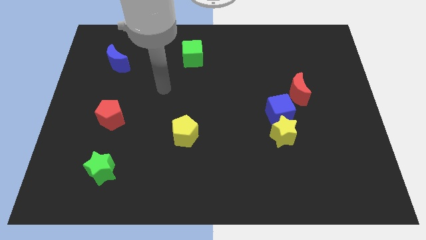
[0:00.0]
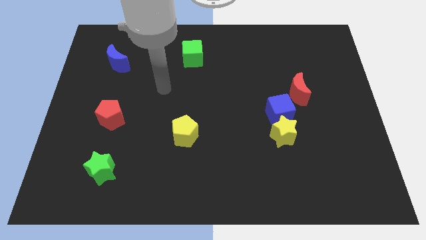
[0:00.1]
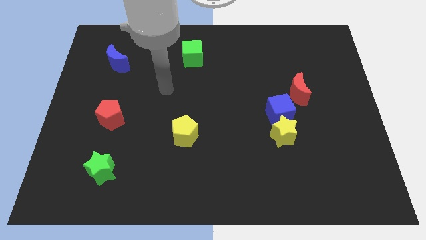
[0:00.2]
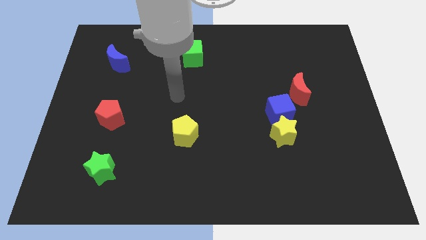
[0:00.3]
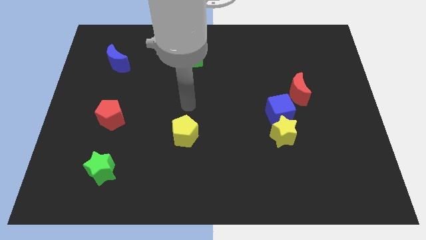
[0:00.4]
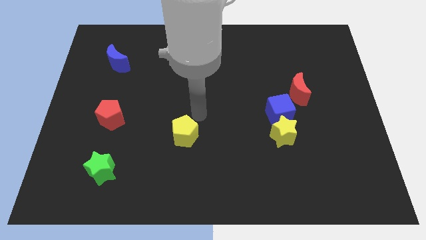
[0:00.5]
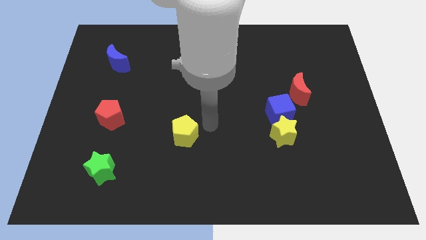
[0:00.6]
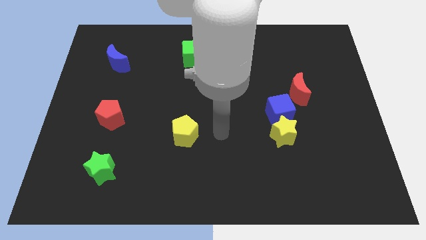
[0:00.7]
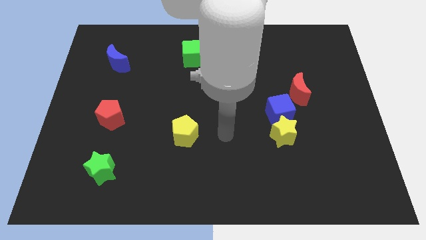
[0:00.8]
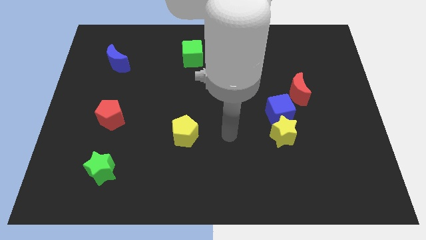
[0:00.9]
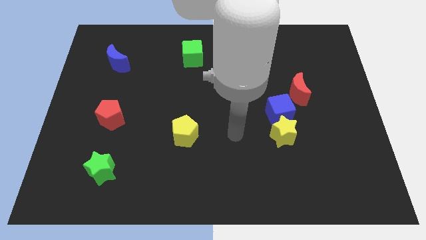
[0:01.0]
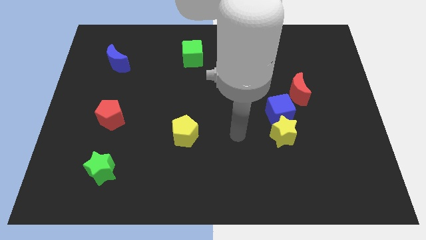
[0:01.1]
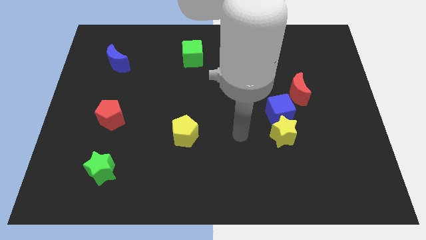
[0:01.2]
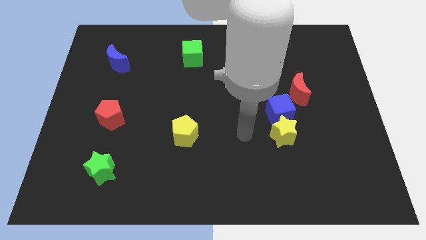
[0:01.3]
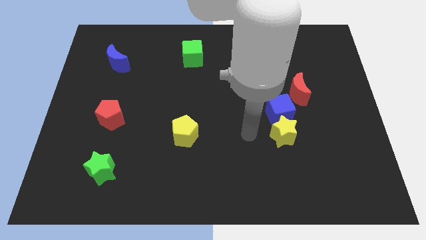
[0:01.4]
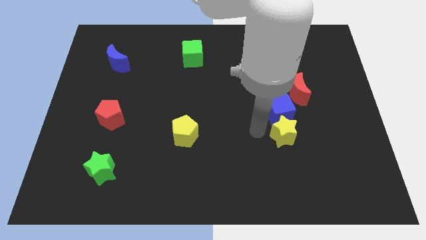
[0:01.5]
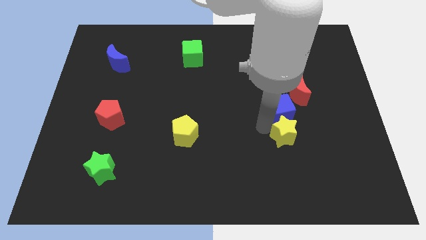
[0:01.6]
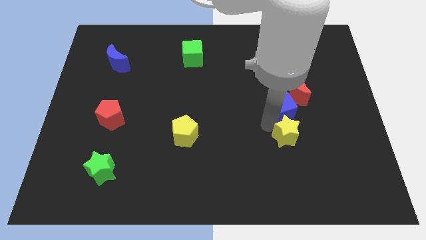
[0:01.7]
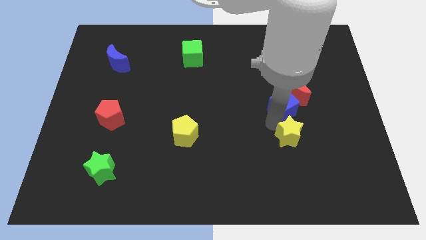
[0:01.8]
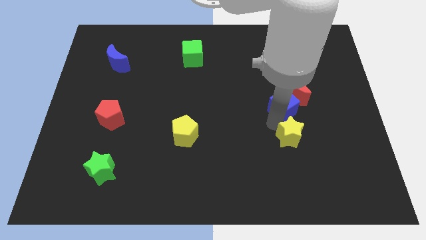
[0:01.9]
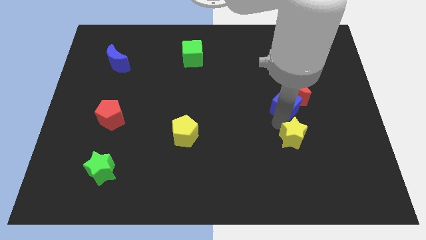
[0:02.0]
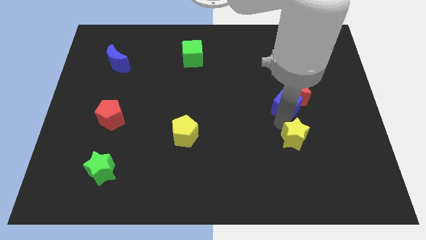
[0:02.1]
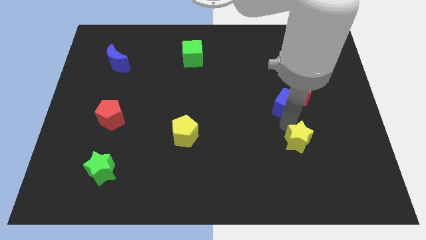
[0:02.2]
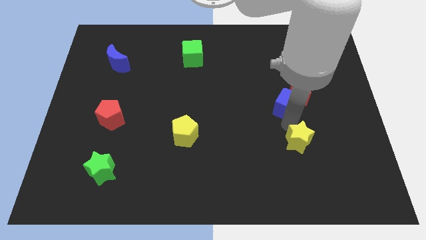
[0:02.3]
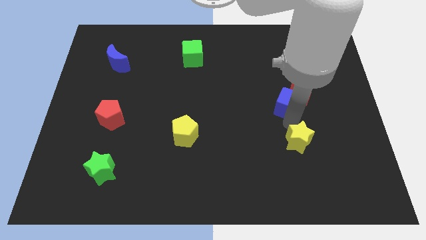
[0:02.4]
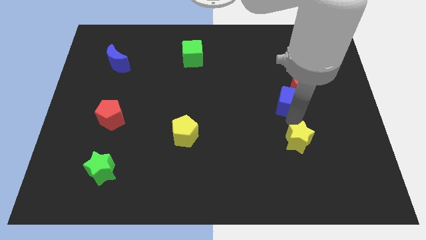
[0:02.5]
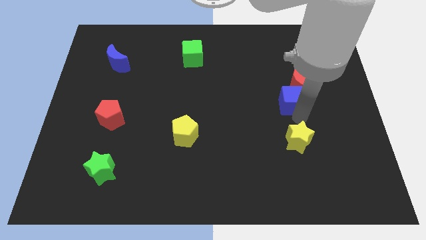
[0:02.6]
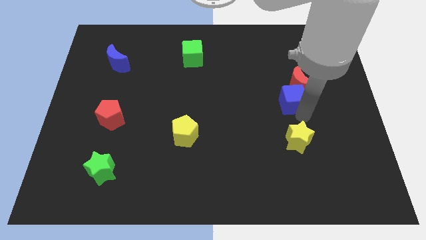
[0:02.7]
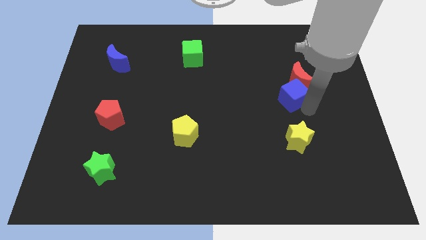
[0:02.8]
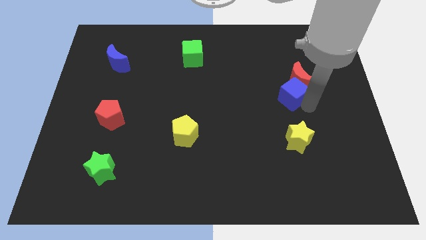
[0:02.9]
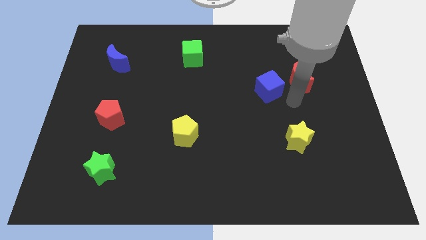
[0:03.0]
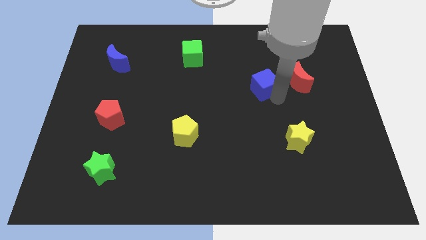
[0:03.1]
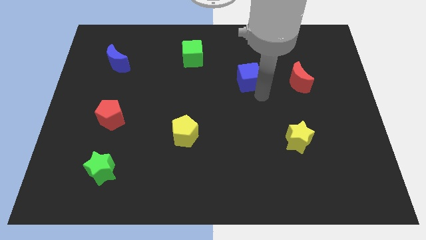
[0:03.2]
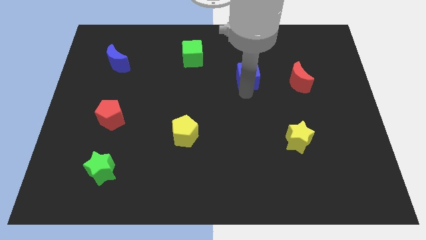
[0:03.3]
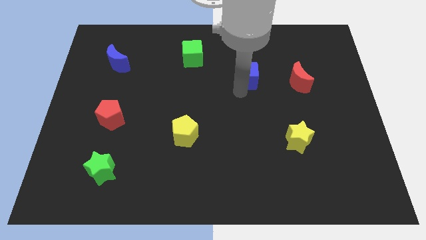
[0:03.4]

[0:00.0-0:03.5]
place the blue cube parallel to red moon

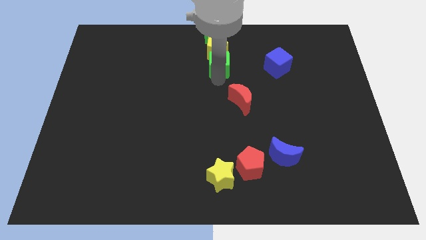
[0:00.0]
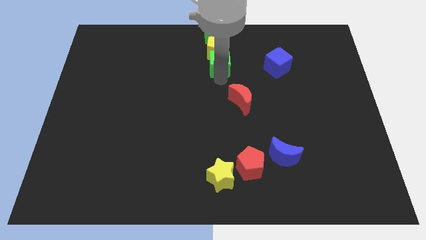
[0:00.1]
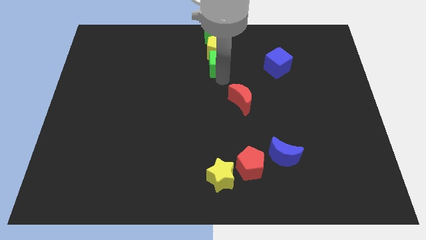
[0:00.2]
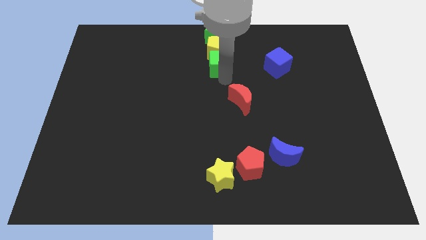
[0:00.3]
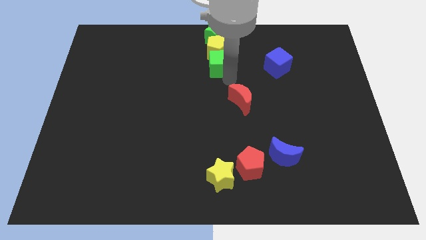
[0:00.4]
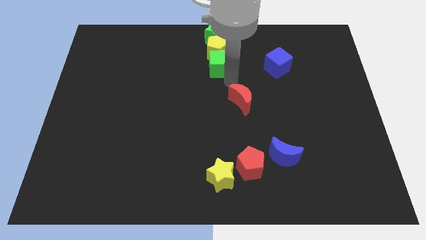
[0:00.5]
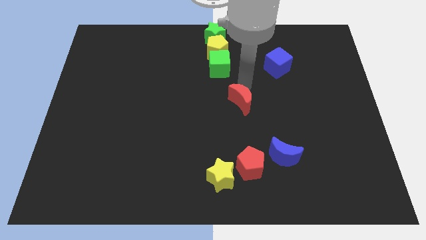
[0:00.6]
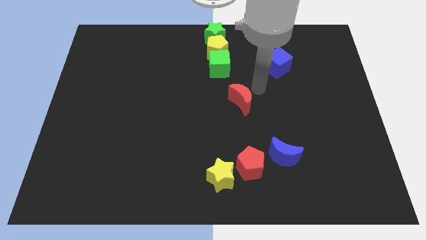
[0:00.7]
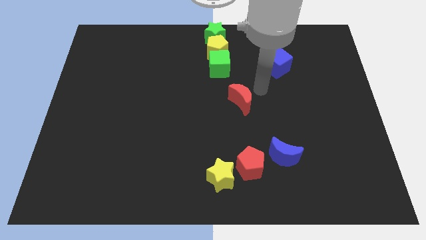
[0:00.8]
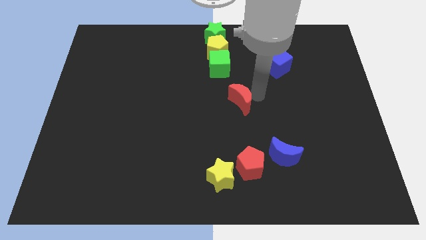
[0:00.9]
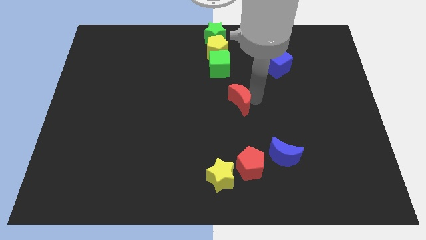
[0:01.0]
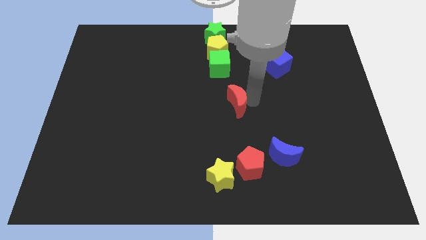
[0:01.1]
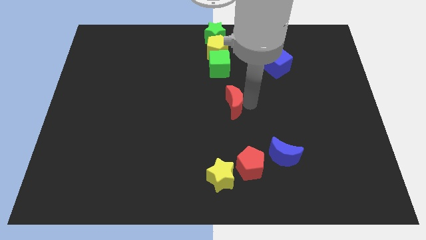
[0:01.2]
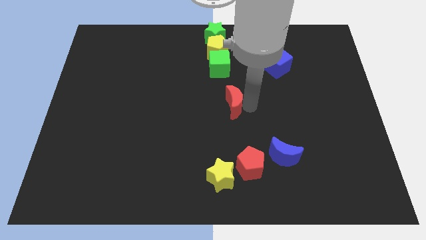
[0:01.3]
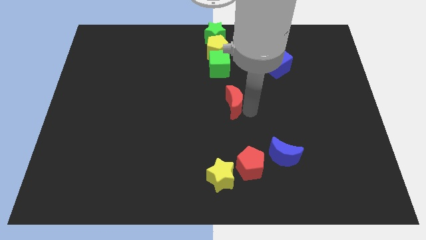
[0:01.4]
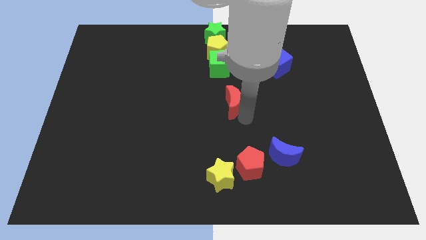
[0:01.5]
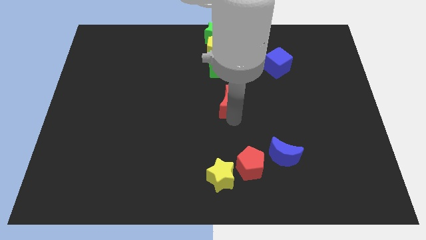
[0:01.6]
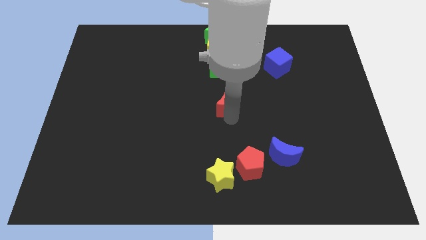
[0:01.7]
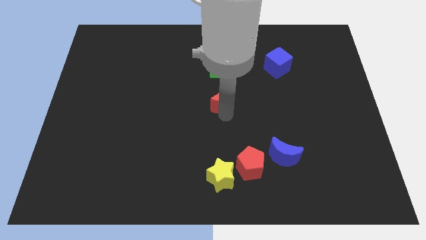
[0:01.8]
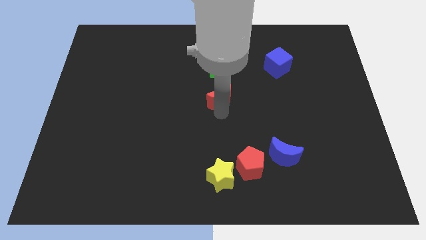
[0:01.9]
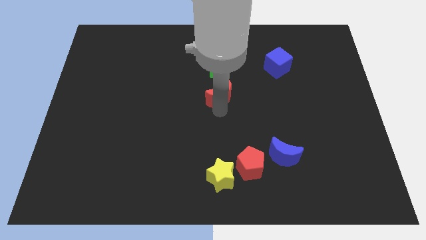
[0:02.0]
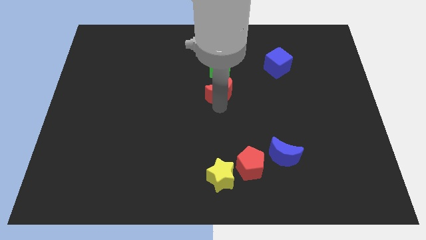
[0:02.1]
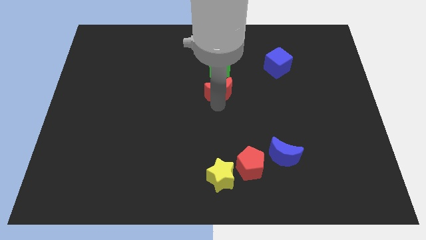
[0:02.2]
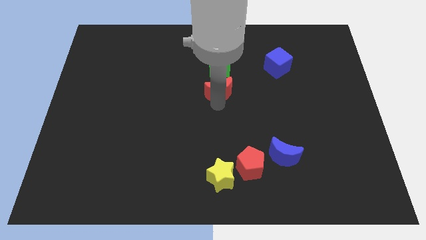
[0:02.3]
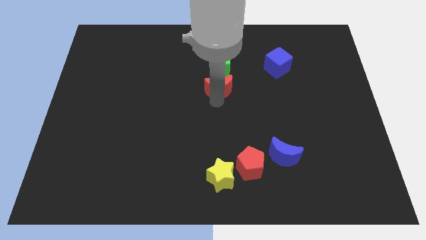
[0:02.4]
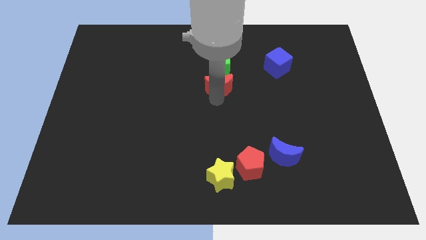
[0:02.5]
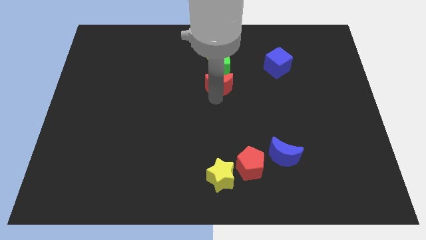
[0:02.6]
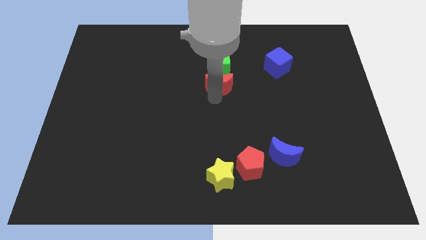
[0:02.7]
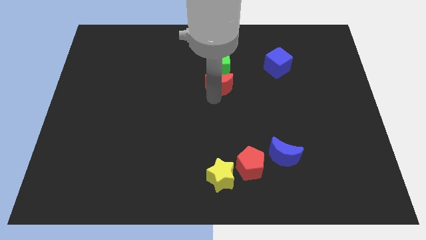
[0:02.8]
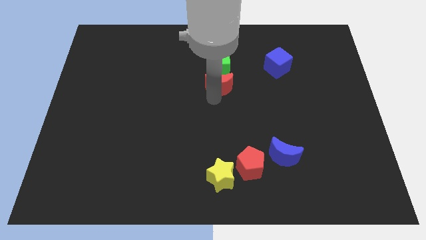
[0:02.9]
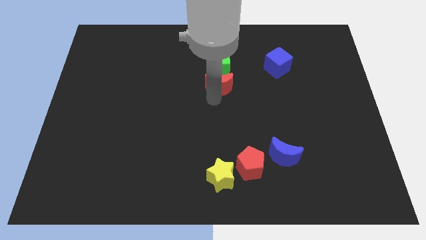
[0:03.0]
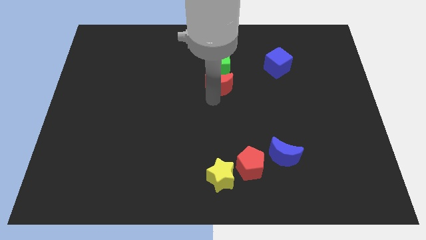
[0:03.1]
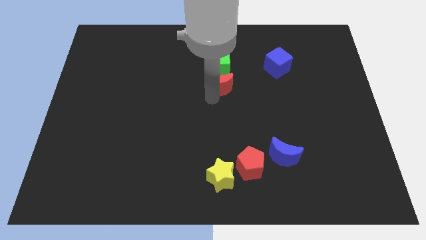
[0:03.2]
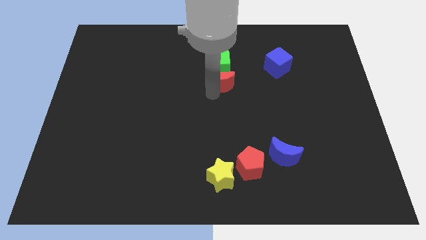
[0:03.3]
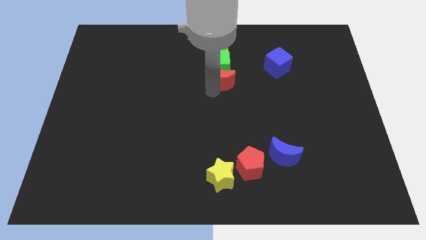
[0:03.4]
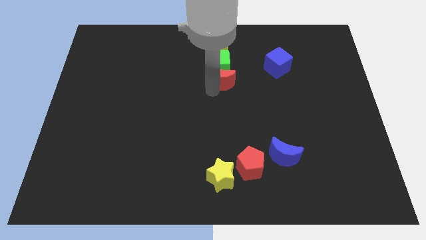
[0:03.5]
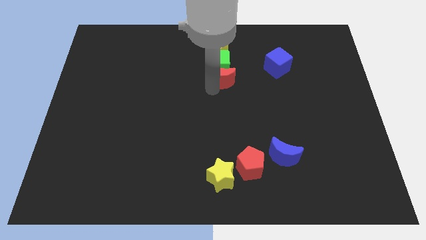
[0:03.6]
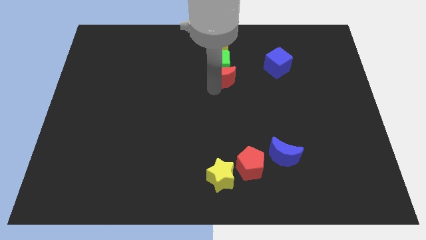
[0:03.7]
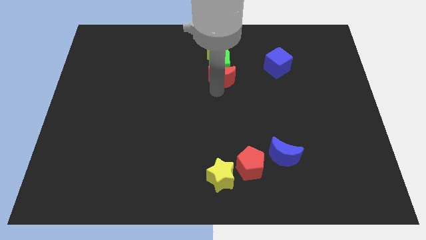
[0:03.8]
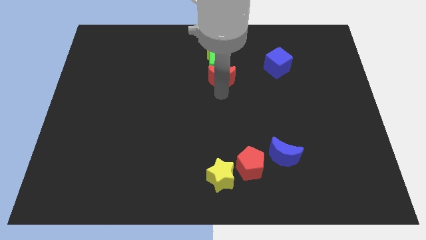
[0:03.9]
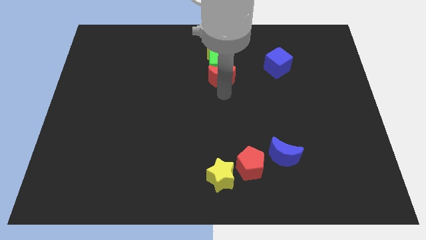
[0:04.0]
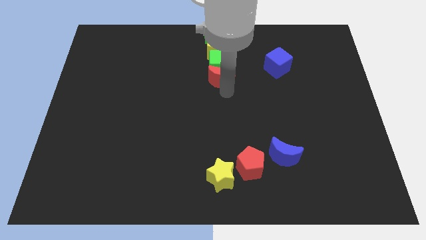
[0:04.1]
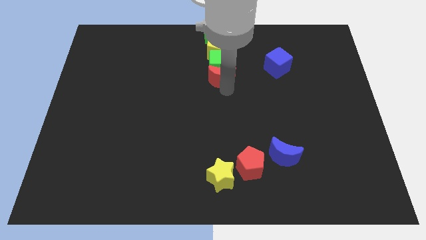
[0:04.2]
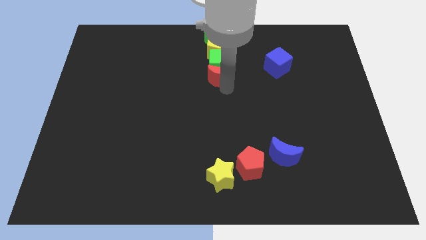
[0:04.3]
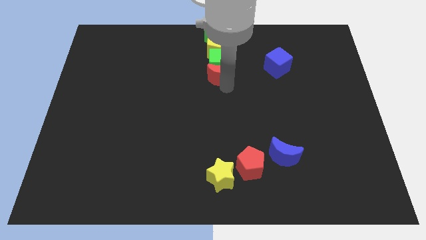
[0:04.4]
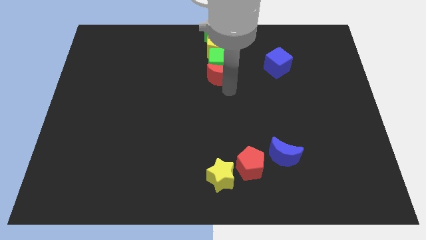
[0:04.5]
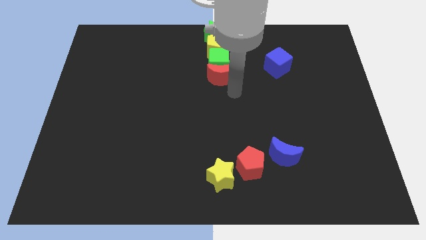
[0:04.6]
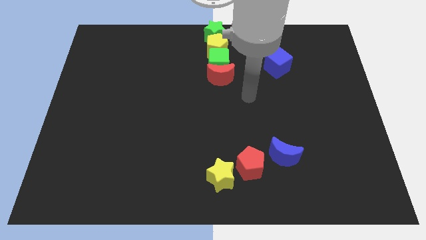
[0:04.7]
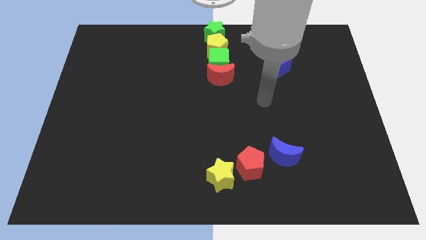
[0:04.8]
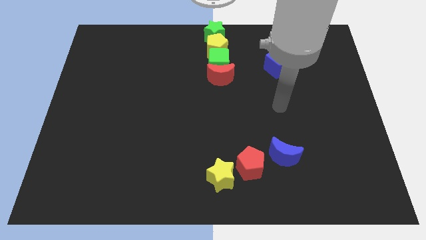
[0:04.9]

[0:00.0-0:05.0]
slightly place the red moon down to the green cube

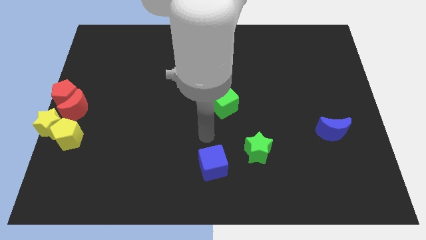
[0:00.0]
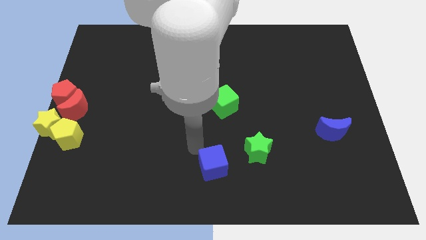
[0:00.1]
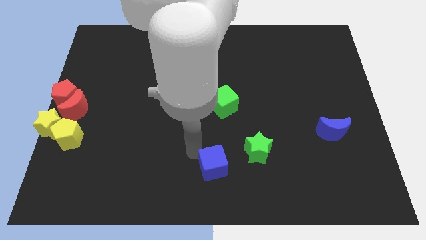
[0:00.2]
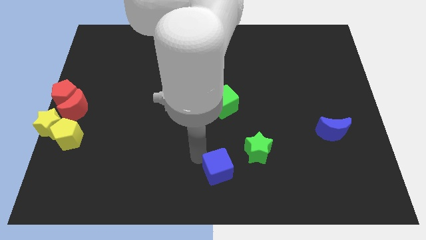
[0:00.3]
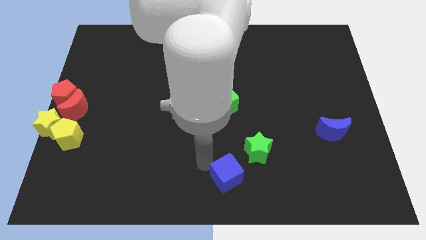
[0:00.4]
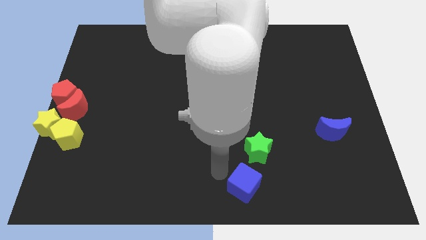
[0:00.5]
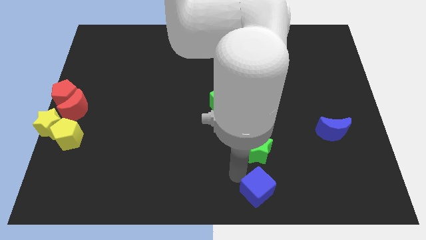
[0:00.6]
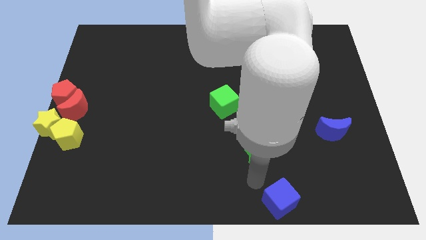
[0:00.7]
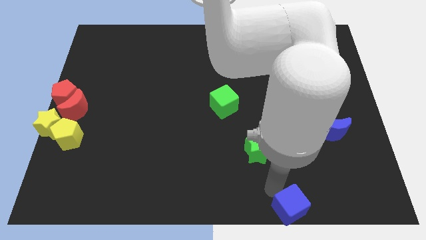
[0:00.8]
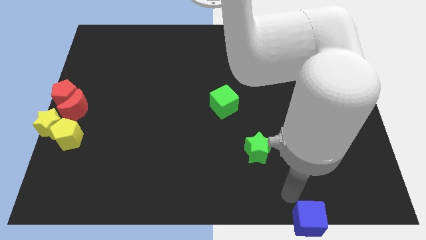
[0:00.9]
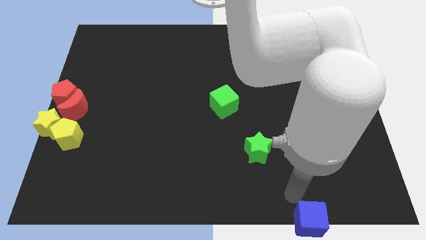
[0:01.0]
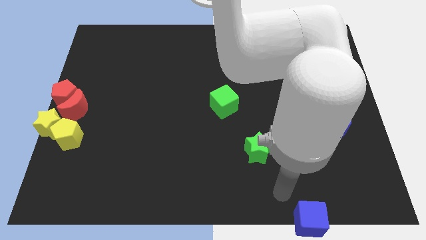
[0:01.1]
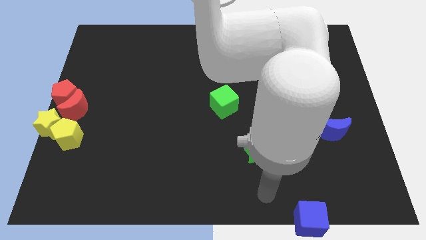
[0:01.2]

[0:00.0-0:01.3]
slide the blue cube to the bottom of the board
